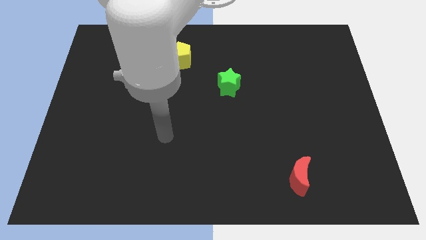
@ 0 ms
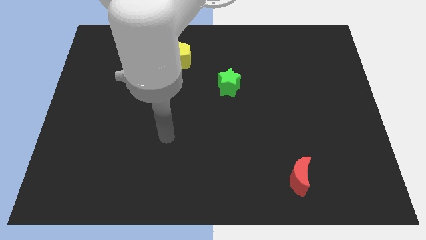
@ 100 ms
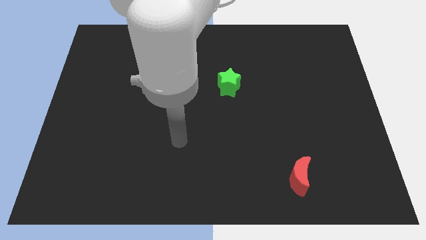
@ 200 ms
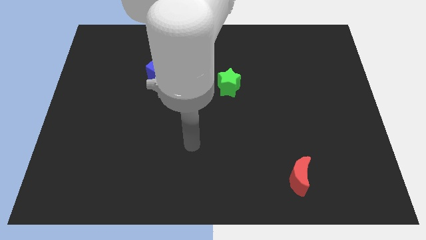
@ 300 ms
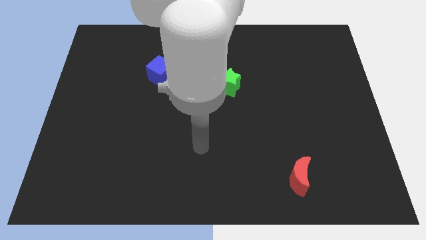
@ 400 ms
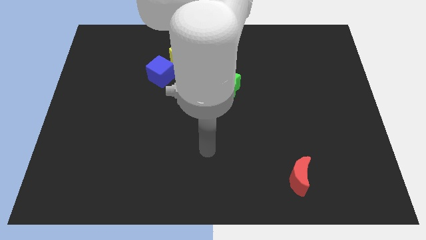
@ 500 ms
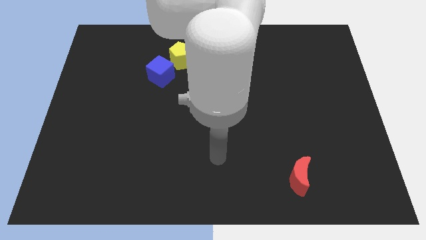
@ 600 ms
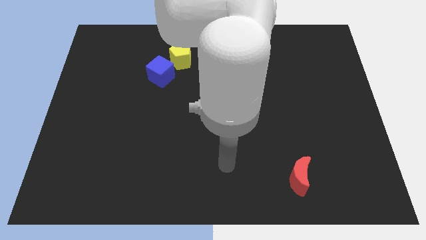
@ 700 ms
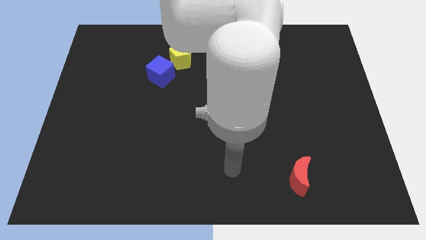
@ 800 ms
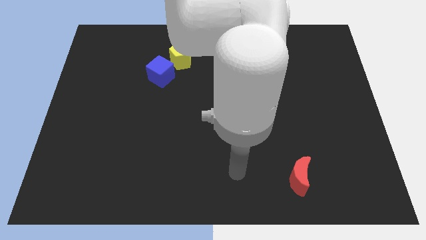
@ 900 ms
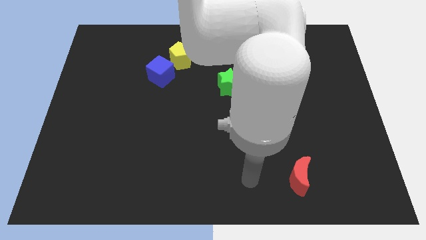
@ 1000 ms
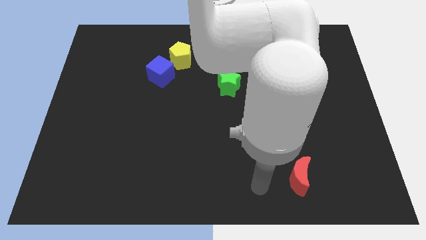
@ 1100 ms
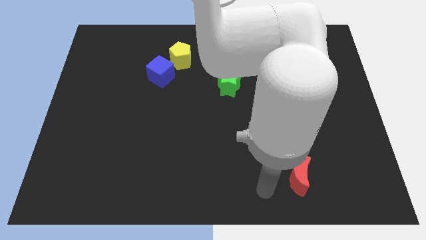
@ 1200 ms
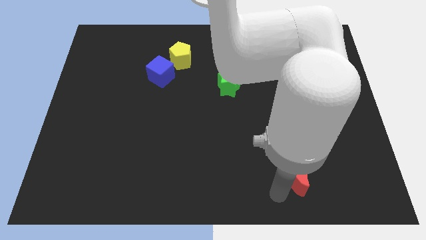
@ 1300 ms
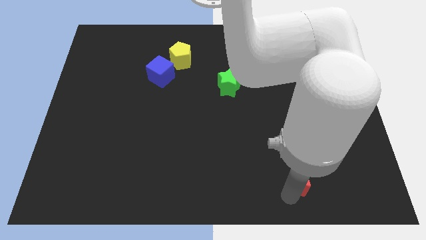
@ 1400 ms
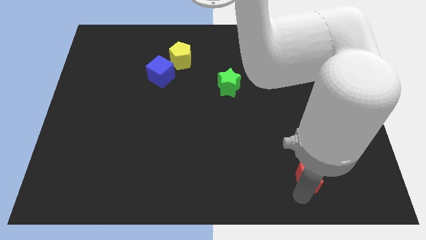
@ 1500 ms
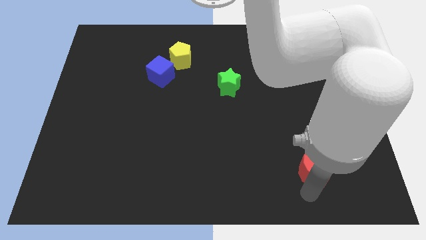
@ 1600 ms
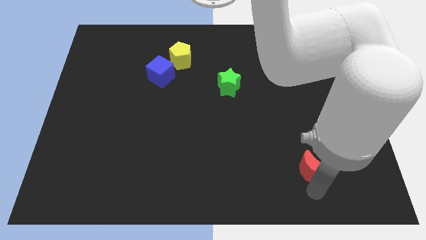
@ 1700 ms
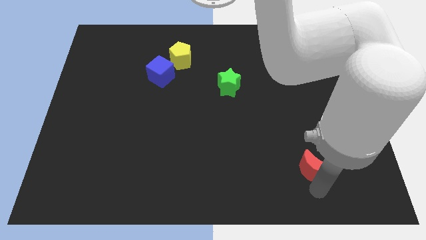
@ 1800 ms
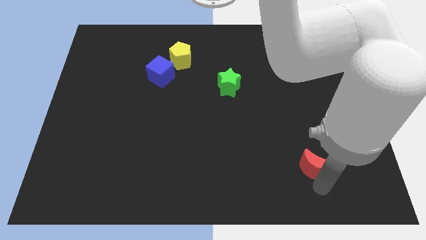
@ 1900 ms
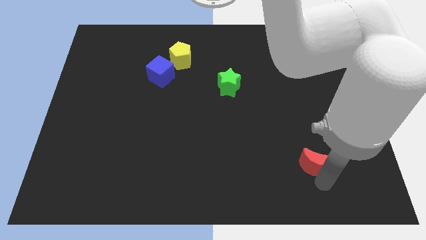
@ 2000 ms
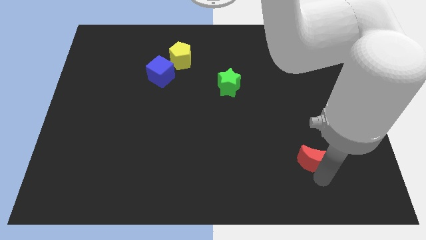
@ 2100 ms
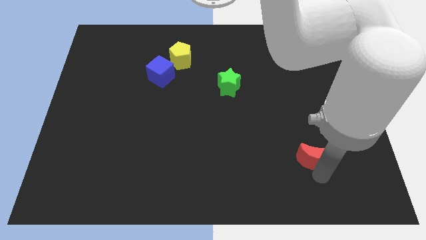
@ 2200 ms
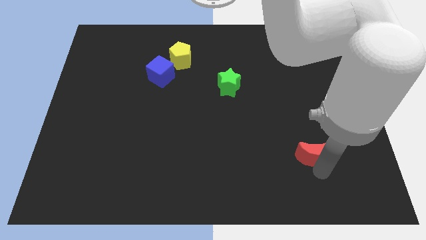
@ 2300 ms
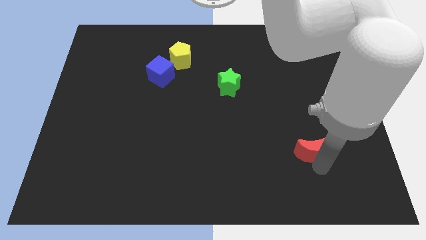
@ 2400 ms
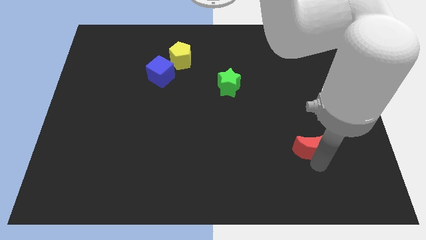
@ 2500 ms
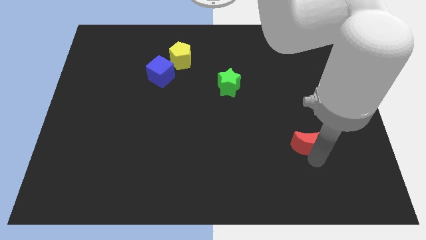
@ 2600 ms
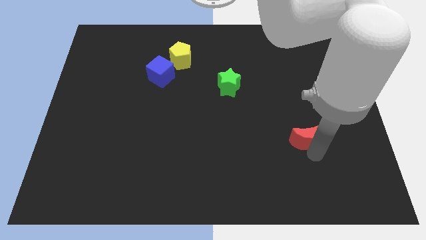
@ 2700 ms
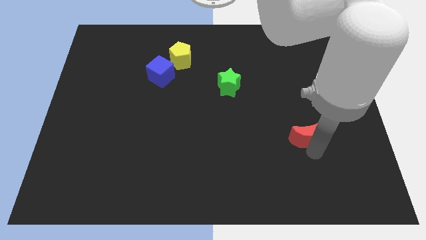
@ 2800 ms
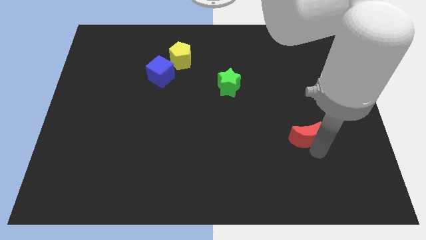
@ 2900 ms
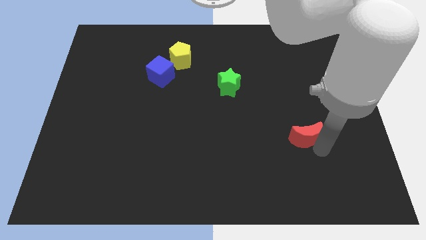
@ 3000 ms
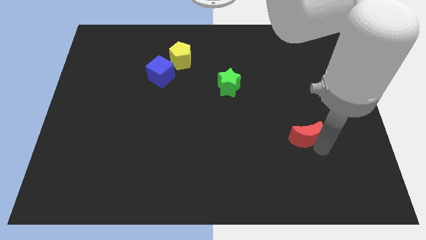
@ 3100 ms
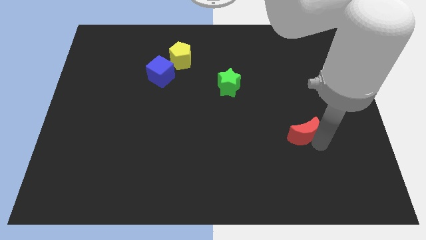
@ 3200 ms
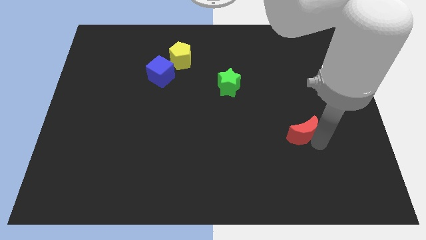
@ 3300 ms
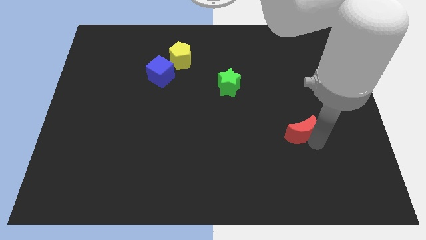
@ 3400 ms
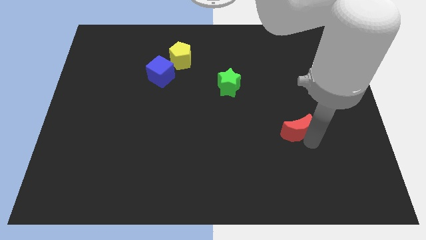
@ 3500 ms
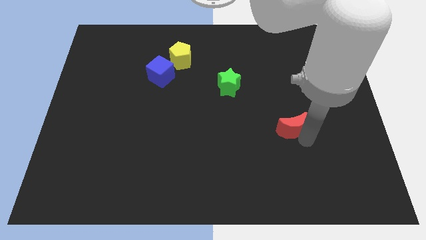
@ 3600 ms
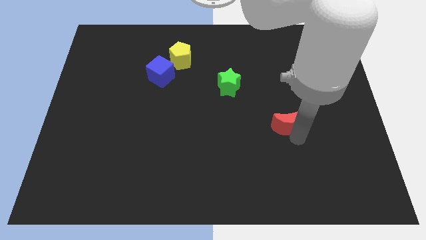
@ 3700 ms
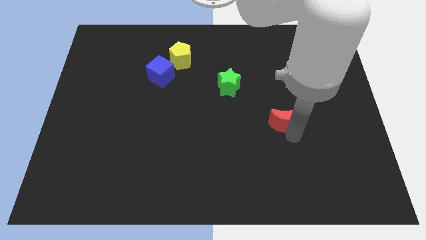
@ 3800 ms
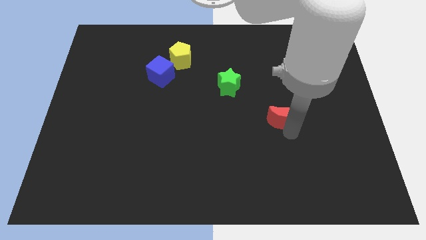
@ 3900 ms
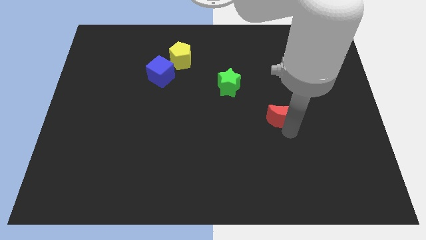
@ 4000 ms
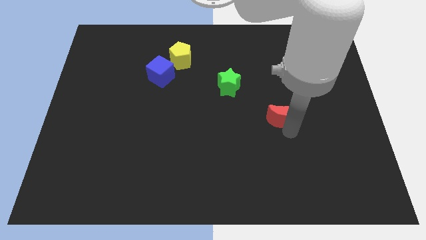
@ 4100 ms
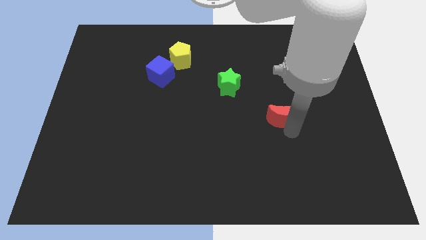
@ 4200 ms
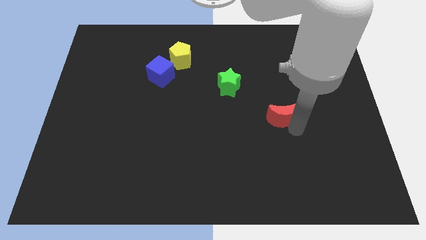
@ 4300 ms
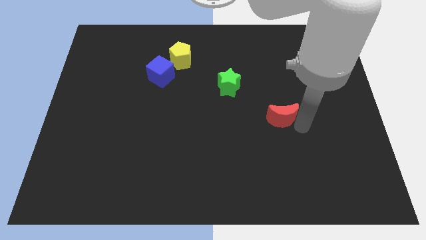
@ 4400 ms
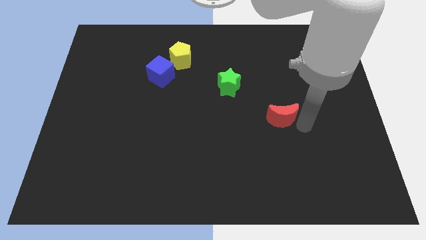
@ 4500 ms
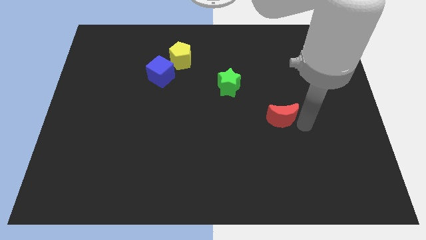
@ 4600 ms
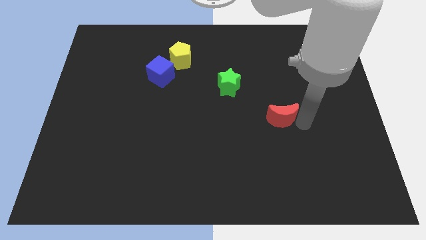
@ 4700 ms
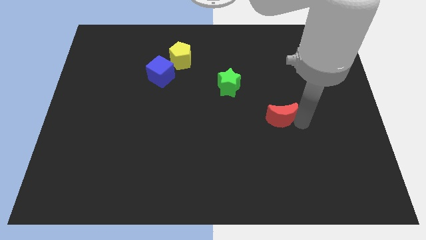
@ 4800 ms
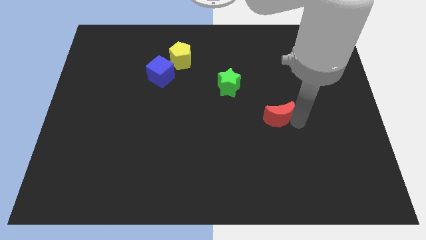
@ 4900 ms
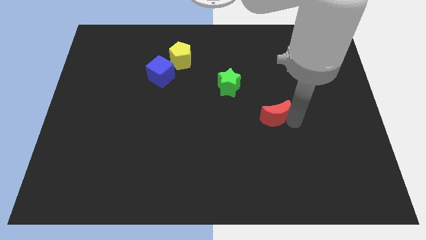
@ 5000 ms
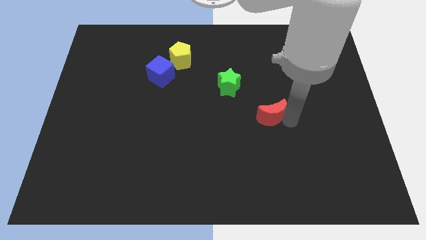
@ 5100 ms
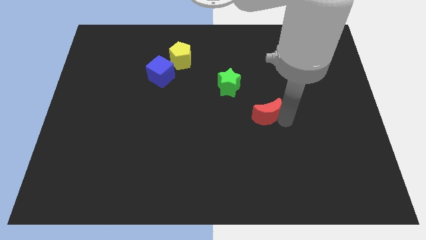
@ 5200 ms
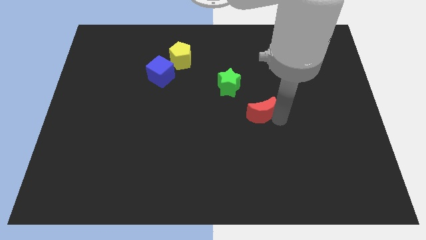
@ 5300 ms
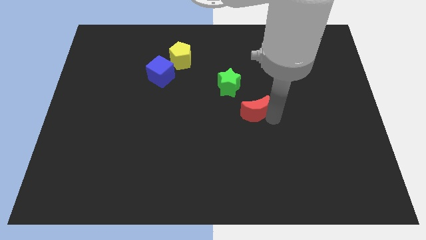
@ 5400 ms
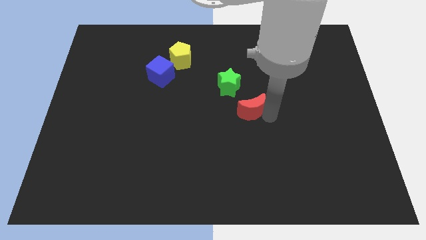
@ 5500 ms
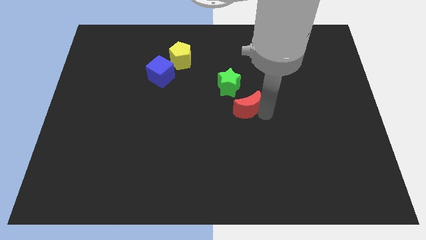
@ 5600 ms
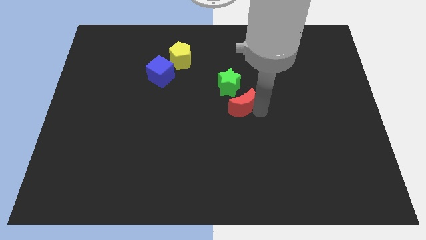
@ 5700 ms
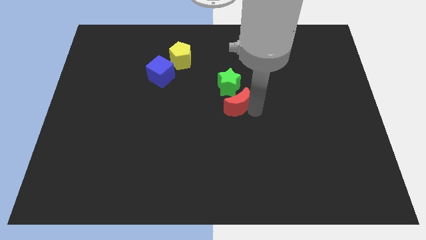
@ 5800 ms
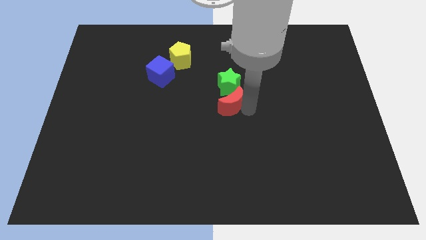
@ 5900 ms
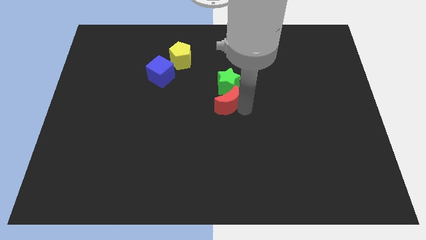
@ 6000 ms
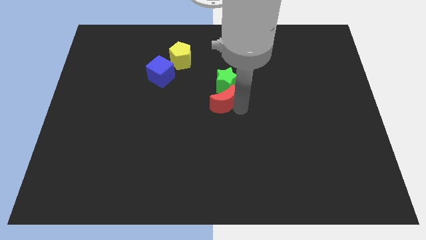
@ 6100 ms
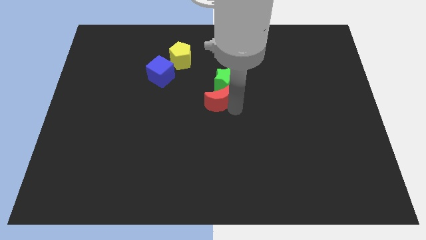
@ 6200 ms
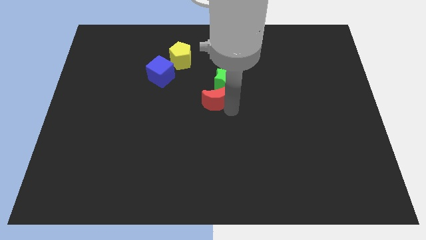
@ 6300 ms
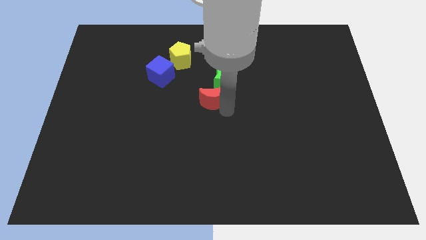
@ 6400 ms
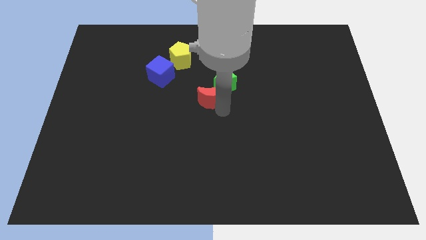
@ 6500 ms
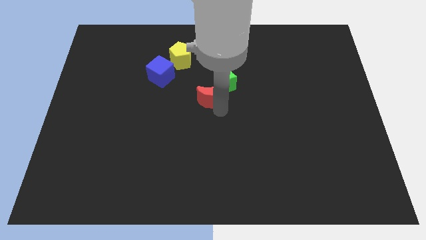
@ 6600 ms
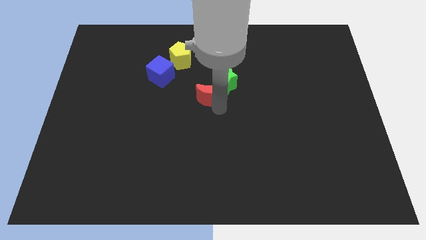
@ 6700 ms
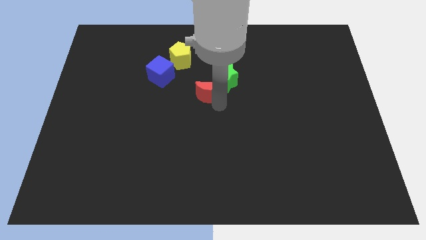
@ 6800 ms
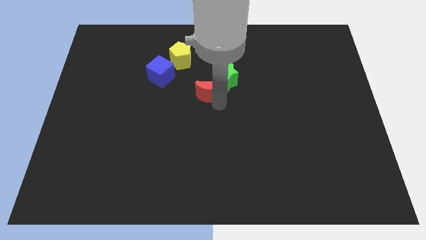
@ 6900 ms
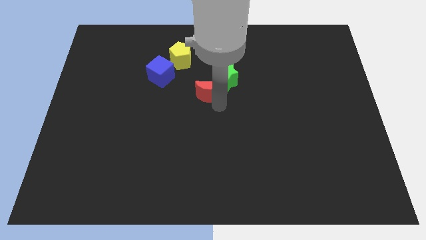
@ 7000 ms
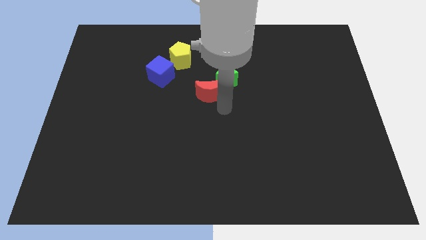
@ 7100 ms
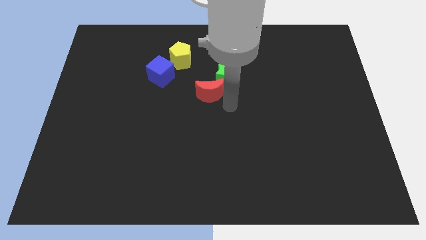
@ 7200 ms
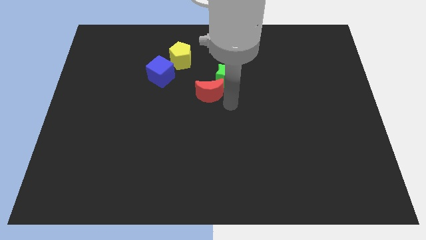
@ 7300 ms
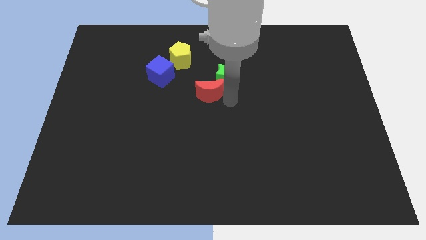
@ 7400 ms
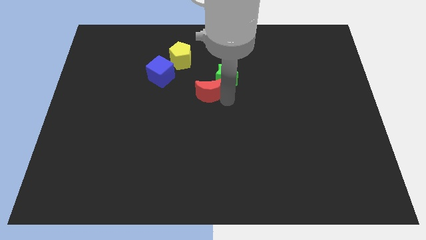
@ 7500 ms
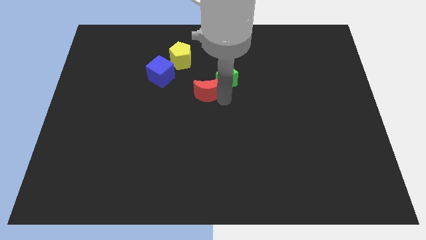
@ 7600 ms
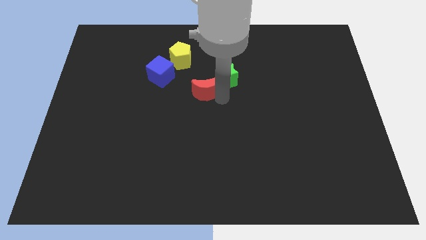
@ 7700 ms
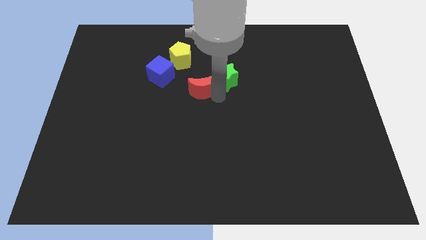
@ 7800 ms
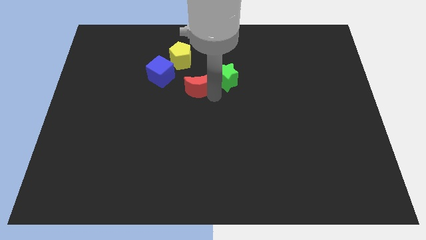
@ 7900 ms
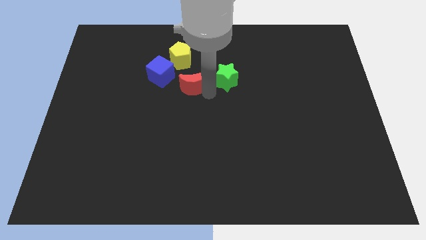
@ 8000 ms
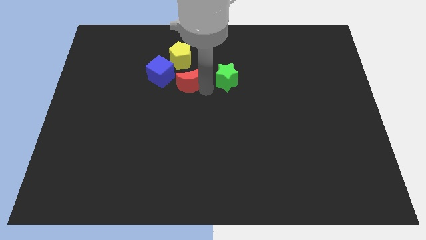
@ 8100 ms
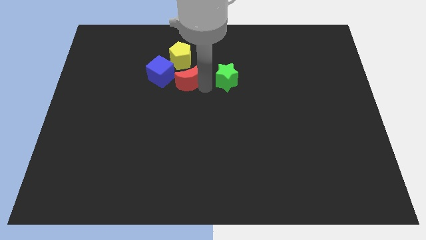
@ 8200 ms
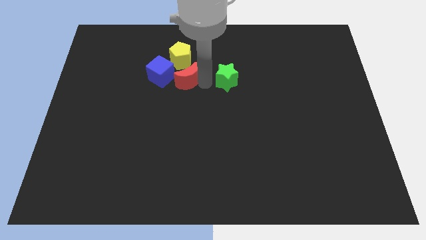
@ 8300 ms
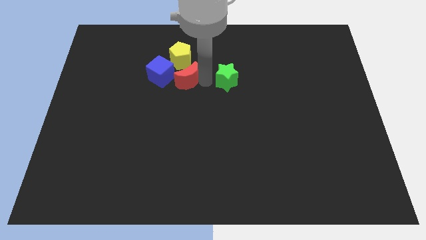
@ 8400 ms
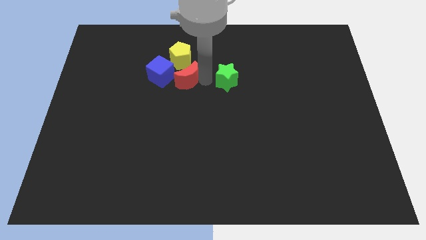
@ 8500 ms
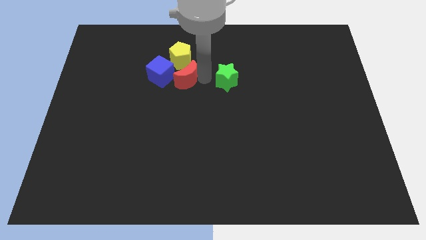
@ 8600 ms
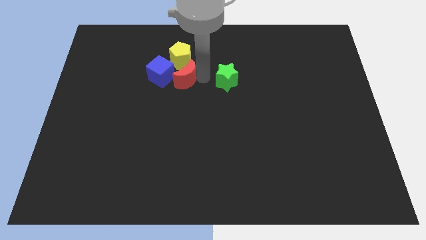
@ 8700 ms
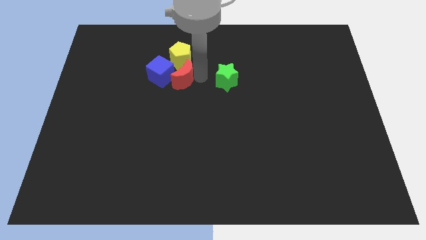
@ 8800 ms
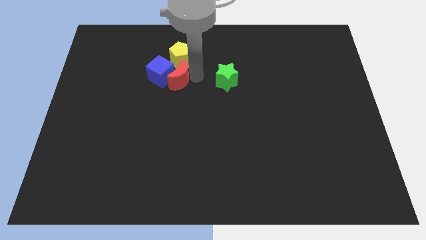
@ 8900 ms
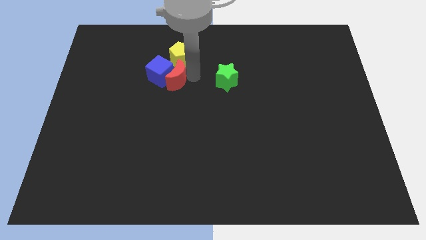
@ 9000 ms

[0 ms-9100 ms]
move the red moon next to the blue cube
